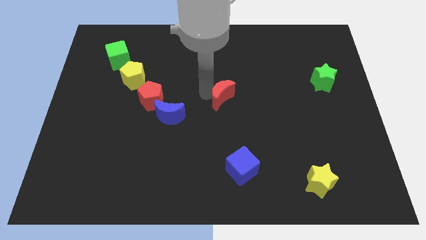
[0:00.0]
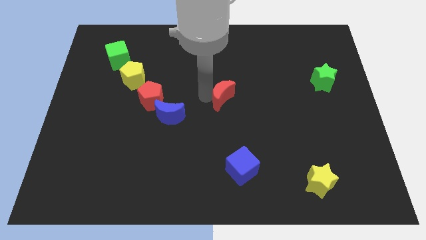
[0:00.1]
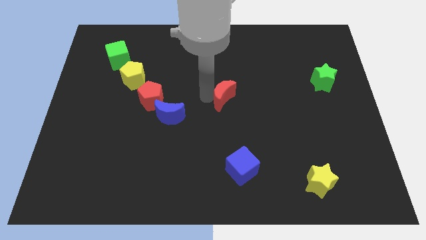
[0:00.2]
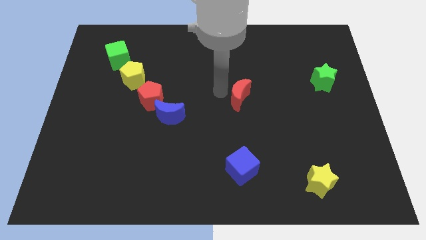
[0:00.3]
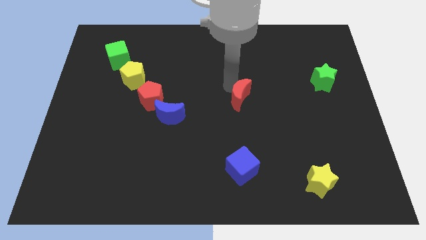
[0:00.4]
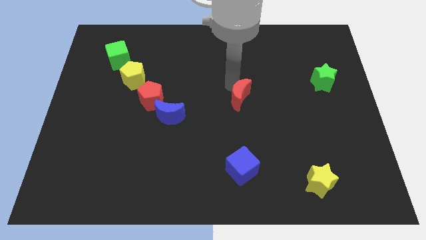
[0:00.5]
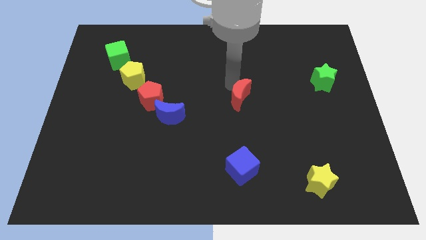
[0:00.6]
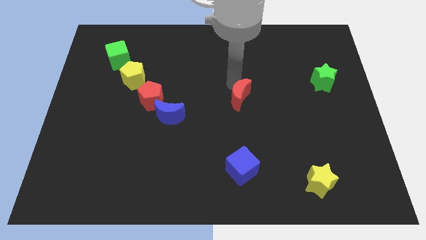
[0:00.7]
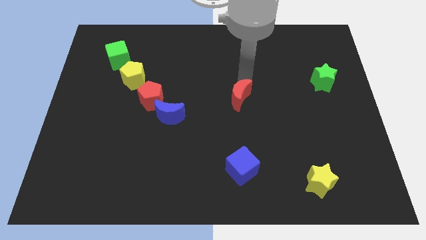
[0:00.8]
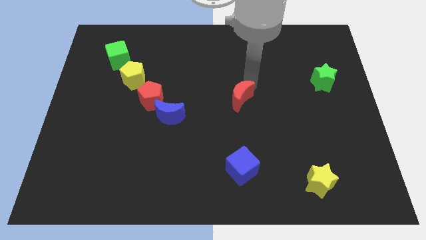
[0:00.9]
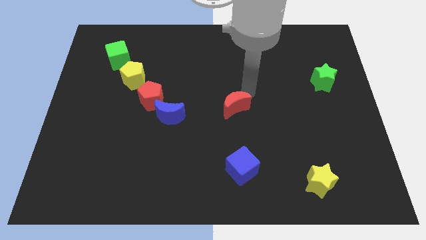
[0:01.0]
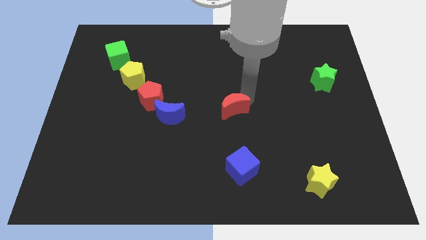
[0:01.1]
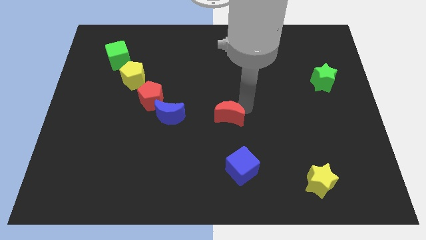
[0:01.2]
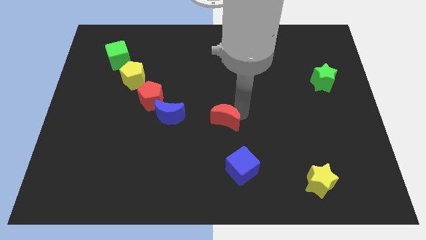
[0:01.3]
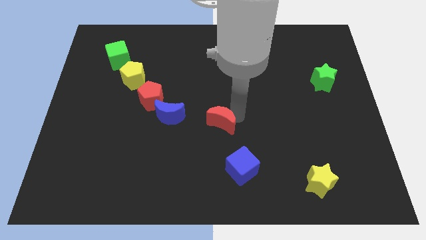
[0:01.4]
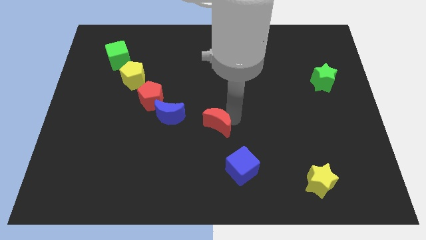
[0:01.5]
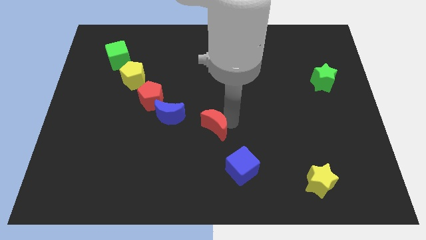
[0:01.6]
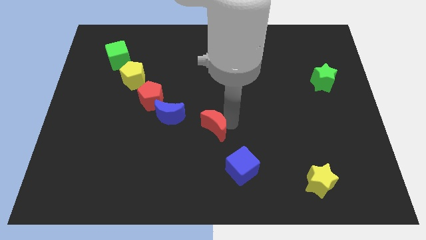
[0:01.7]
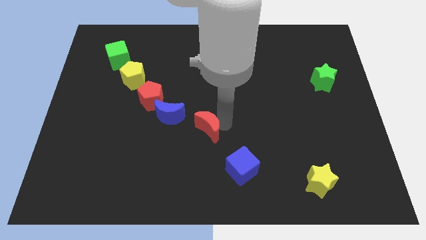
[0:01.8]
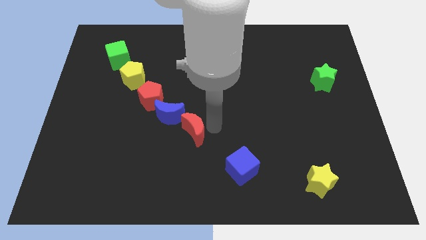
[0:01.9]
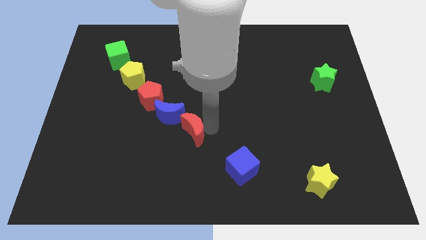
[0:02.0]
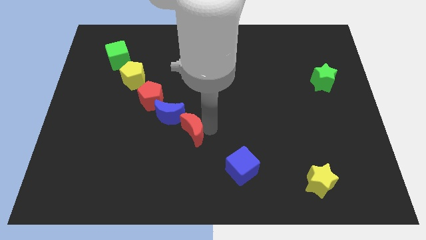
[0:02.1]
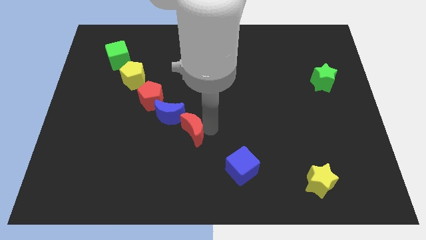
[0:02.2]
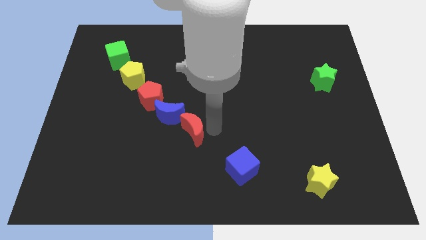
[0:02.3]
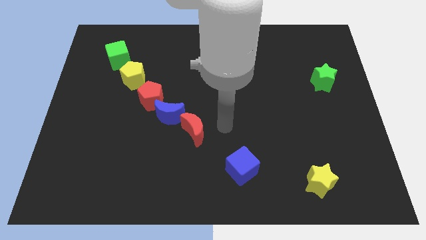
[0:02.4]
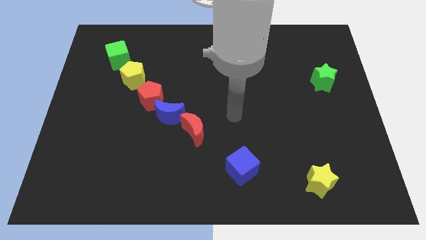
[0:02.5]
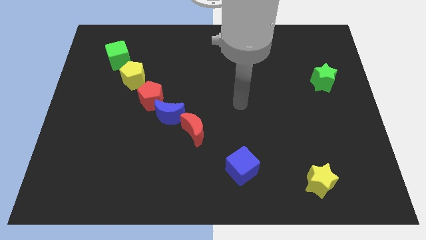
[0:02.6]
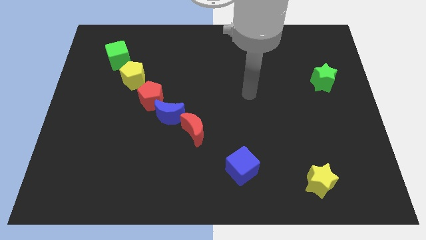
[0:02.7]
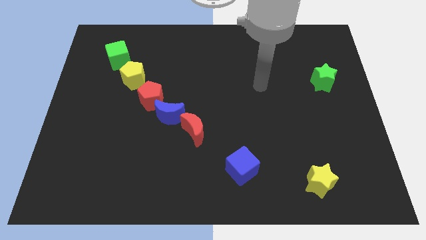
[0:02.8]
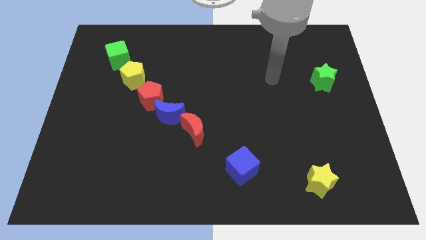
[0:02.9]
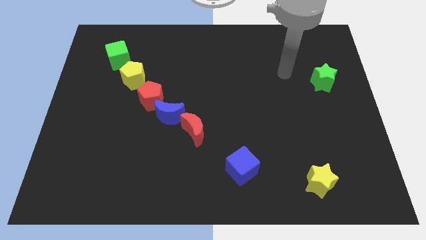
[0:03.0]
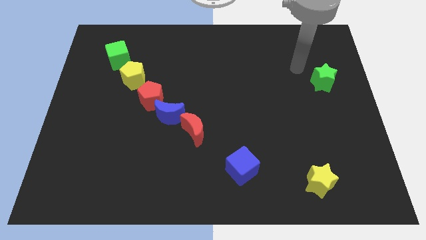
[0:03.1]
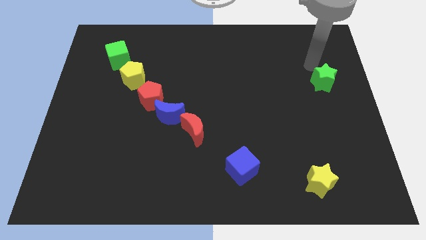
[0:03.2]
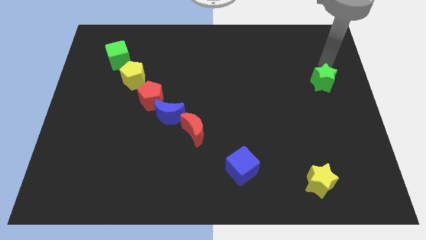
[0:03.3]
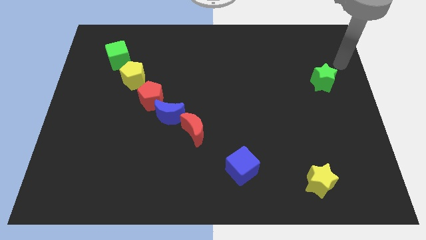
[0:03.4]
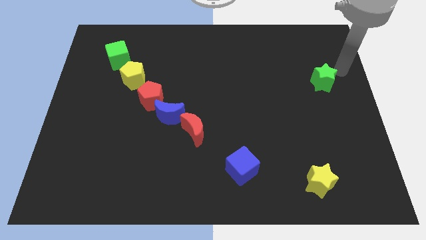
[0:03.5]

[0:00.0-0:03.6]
move the red crescent to the right bottom of the the blue crescent

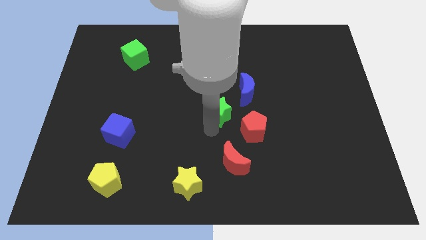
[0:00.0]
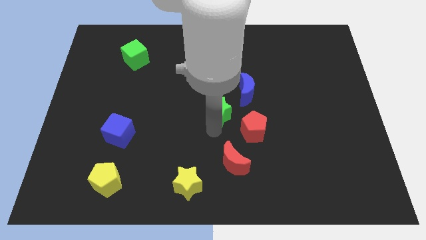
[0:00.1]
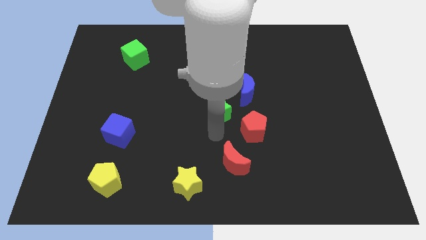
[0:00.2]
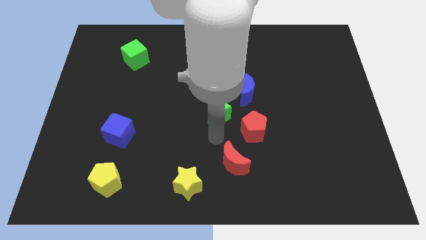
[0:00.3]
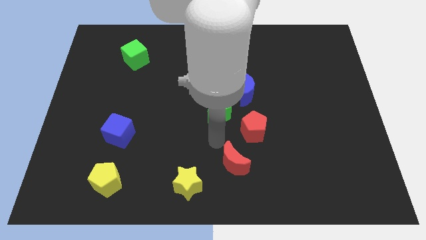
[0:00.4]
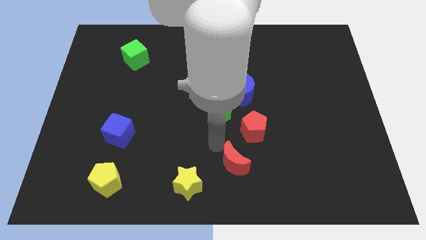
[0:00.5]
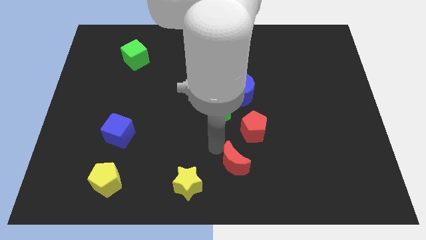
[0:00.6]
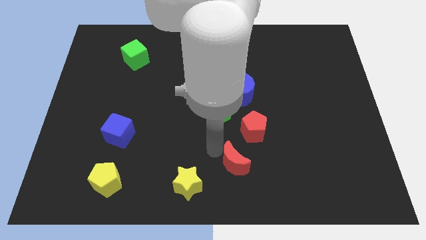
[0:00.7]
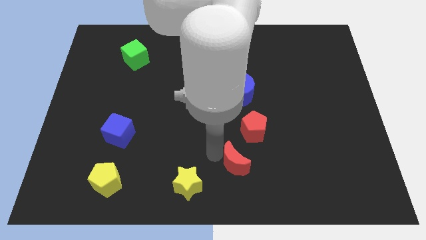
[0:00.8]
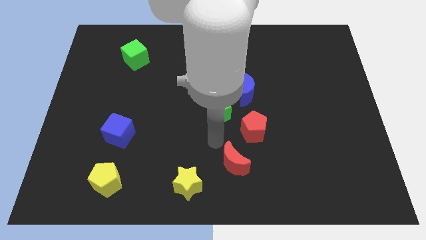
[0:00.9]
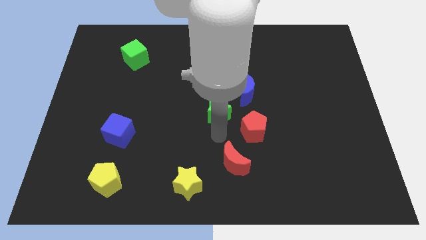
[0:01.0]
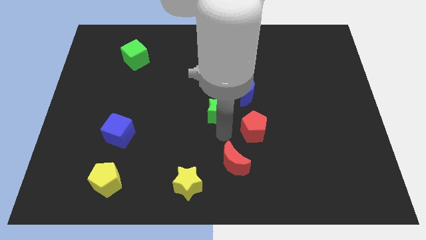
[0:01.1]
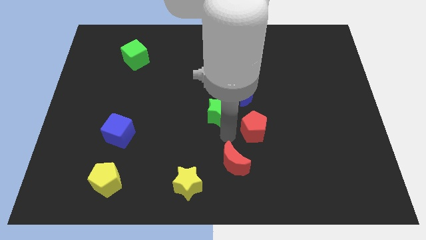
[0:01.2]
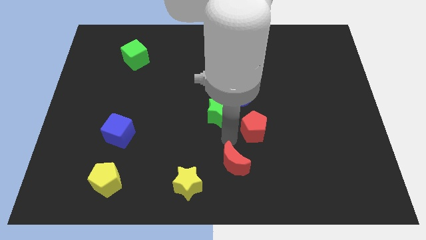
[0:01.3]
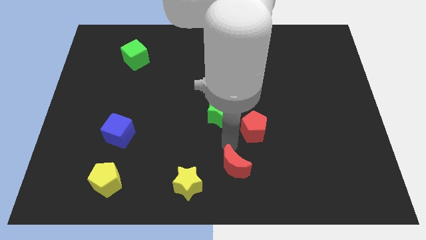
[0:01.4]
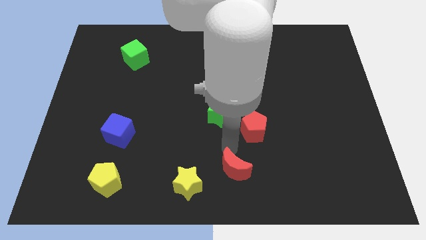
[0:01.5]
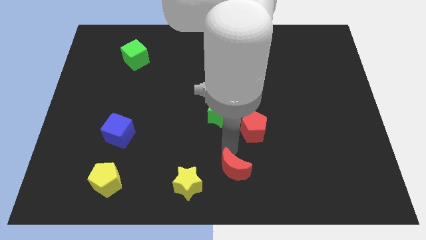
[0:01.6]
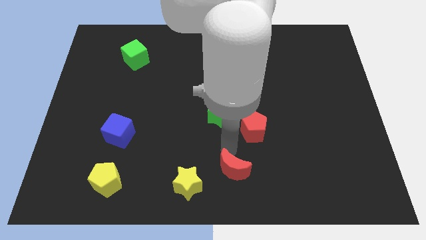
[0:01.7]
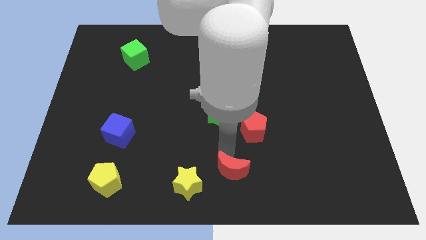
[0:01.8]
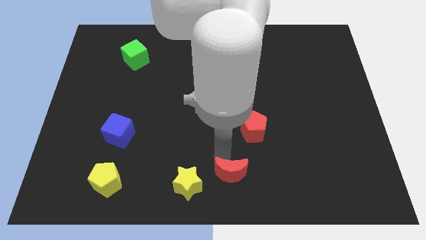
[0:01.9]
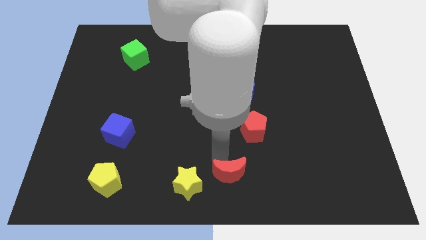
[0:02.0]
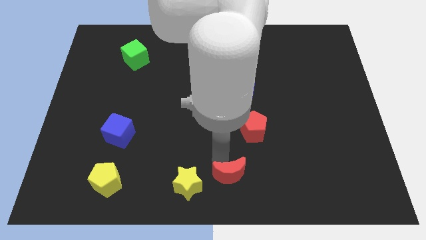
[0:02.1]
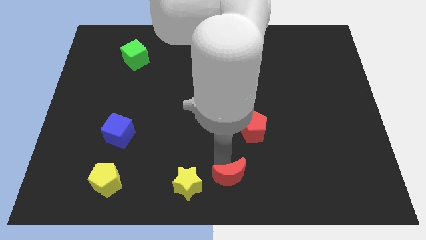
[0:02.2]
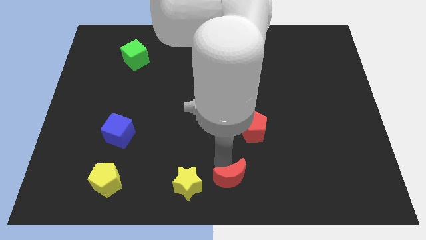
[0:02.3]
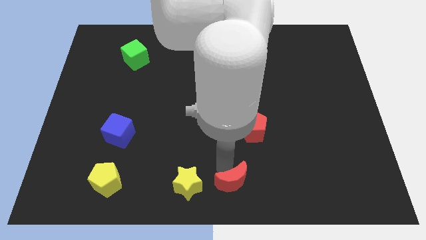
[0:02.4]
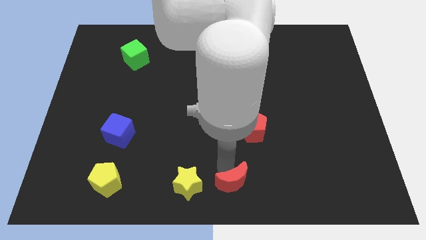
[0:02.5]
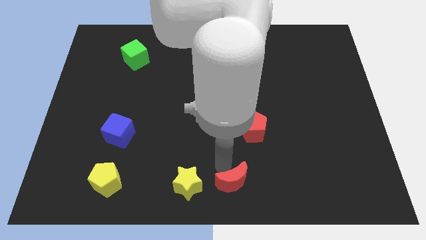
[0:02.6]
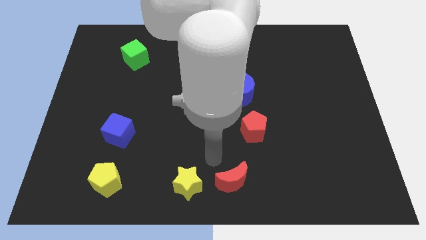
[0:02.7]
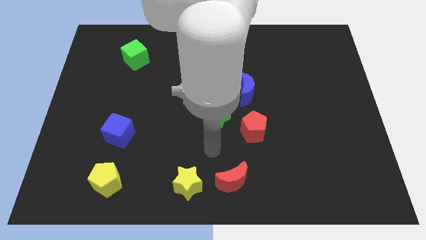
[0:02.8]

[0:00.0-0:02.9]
place red moon to the right of yellow star

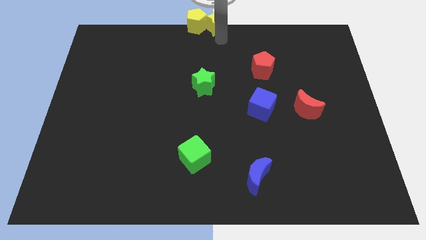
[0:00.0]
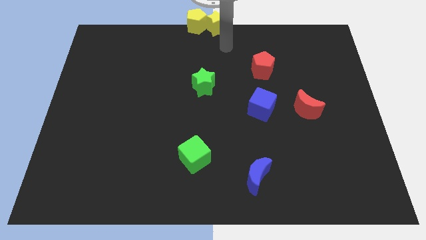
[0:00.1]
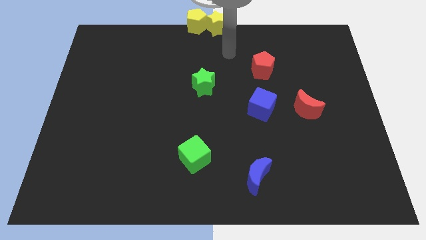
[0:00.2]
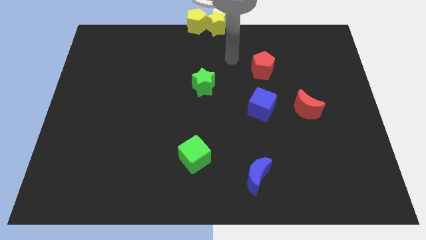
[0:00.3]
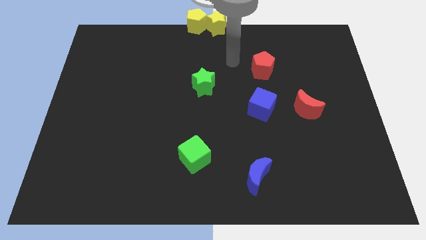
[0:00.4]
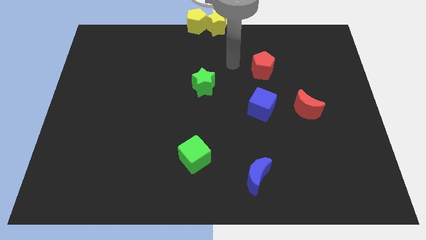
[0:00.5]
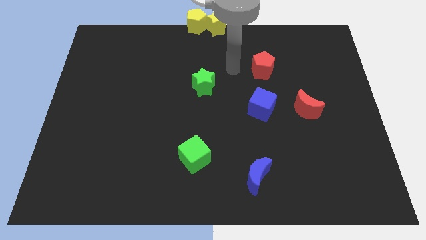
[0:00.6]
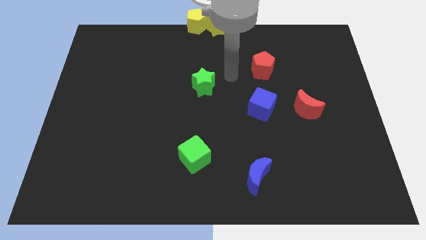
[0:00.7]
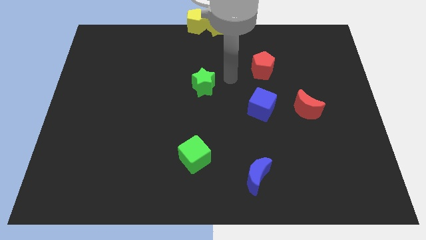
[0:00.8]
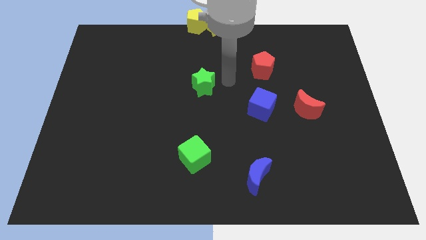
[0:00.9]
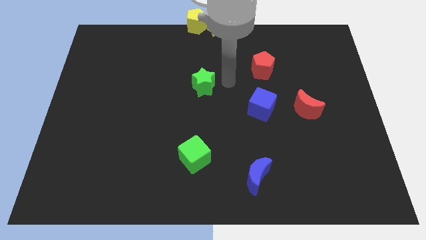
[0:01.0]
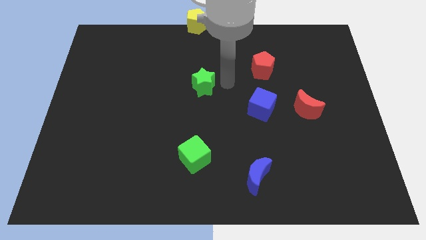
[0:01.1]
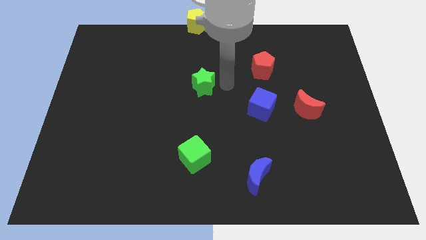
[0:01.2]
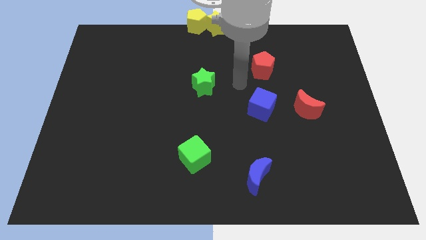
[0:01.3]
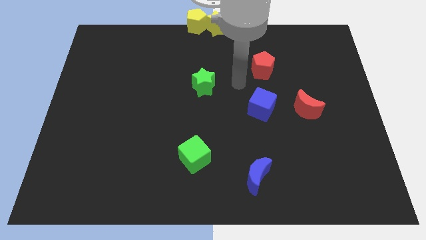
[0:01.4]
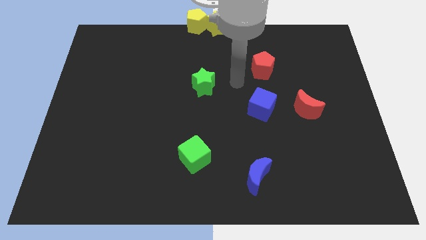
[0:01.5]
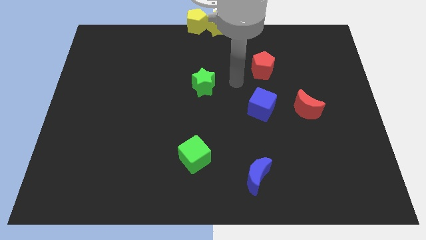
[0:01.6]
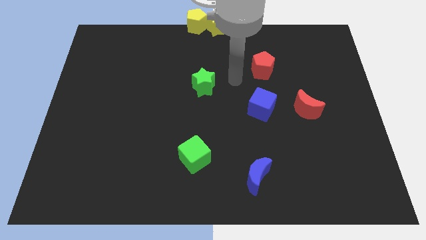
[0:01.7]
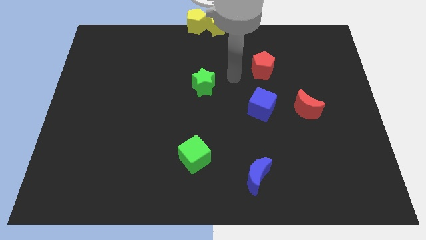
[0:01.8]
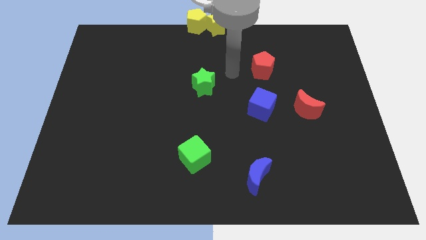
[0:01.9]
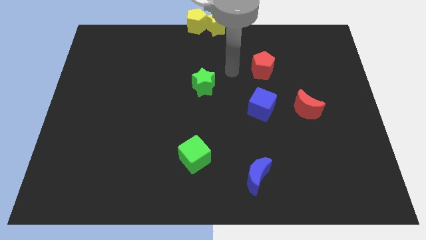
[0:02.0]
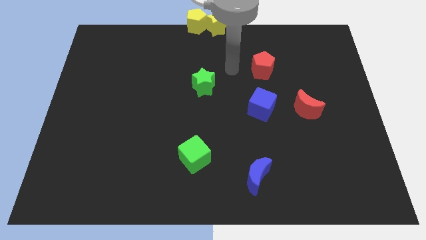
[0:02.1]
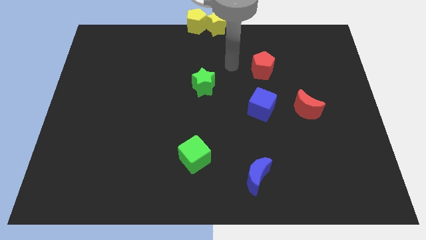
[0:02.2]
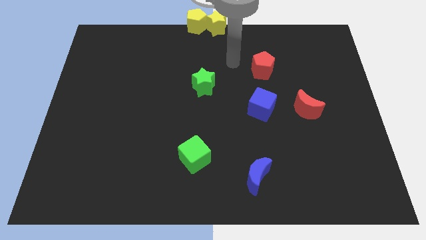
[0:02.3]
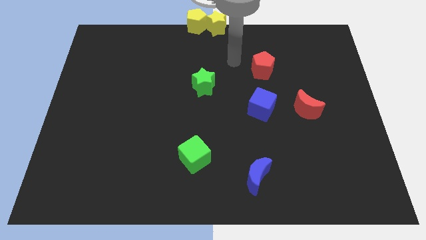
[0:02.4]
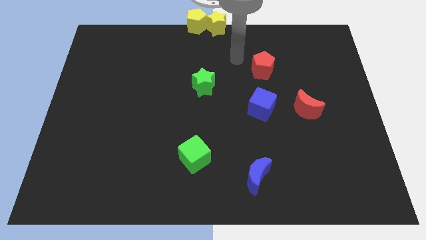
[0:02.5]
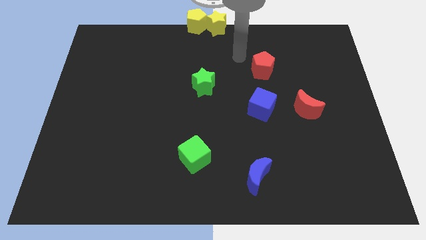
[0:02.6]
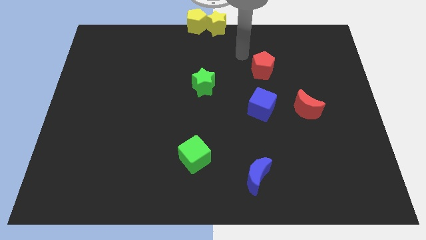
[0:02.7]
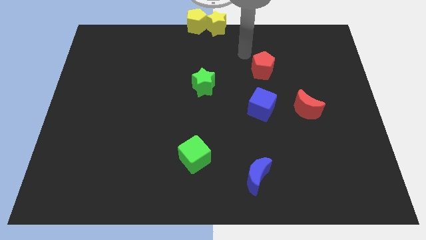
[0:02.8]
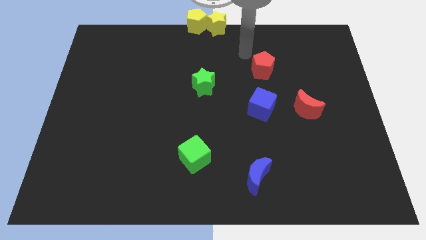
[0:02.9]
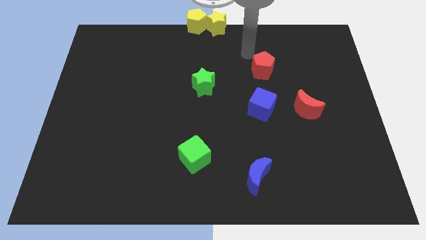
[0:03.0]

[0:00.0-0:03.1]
place the arm to the top left of the red pentagon
